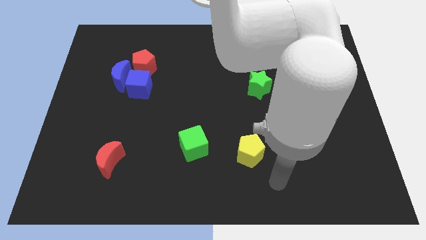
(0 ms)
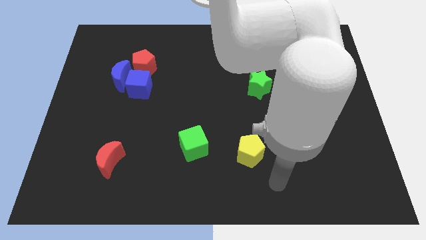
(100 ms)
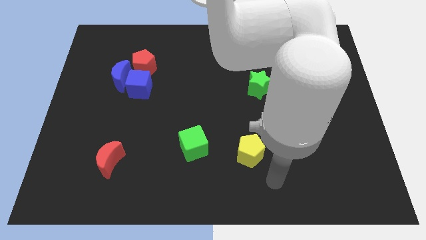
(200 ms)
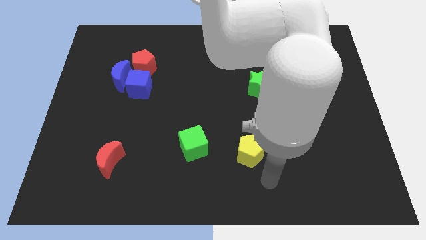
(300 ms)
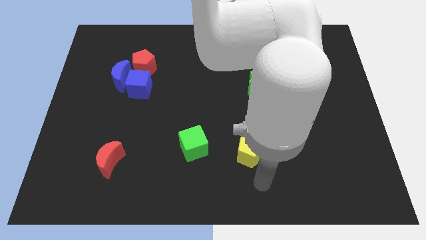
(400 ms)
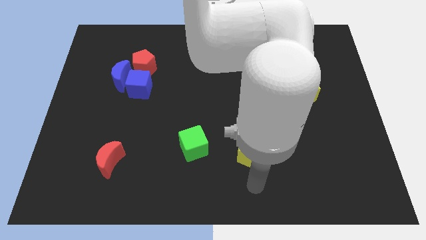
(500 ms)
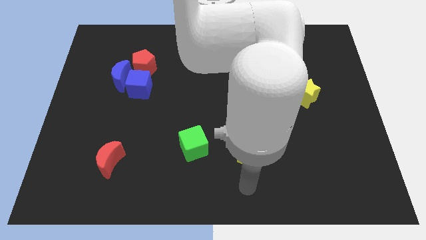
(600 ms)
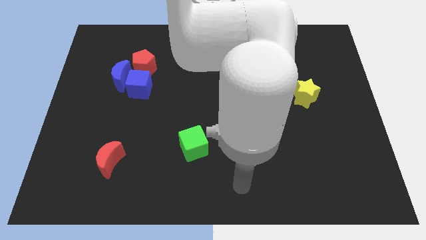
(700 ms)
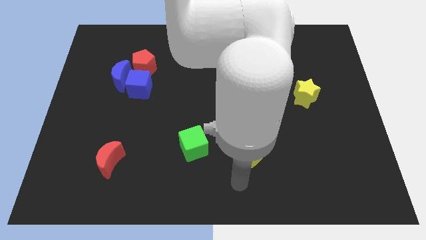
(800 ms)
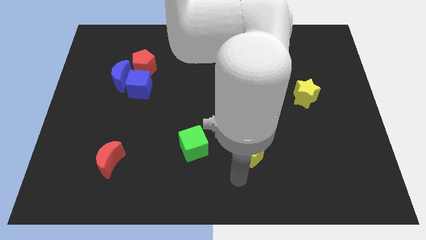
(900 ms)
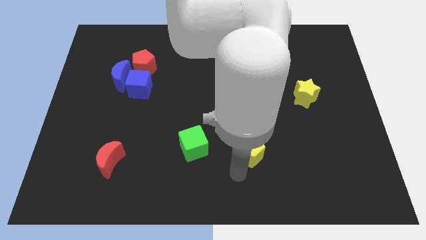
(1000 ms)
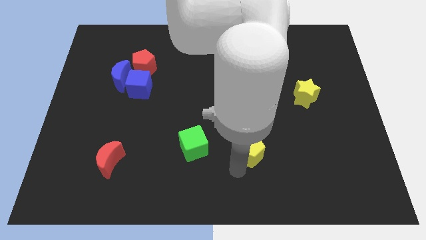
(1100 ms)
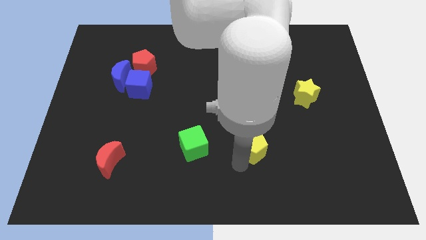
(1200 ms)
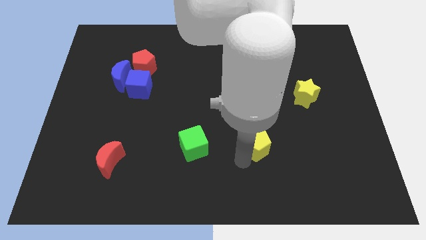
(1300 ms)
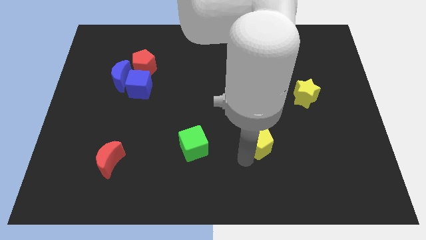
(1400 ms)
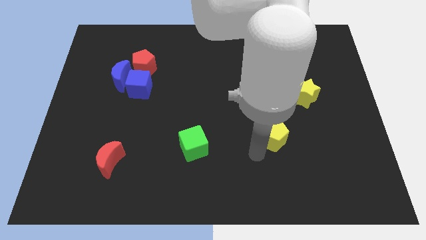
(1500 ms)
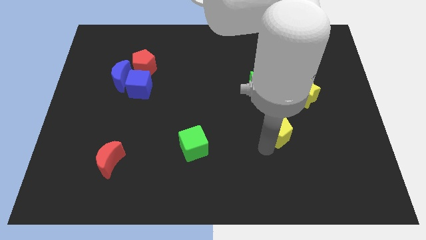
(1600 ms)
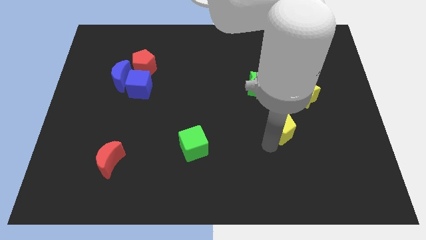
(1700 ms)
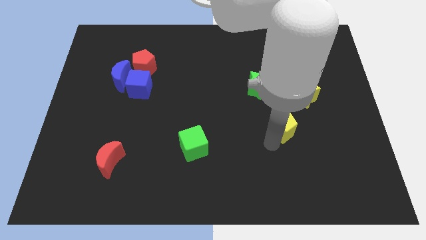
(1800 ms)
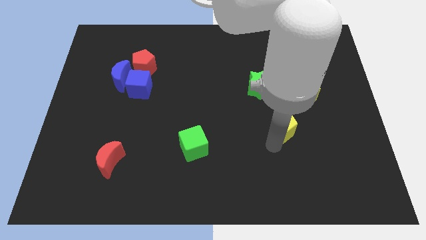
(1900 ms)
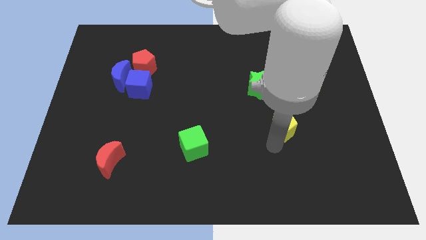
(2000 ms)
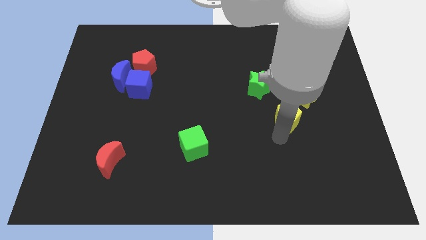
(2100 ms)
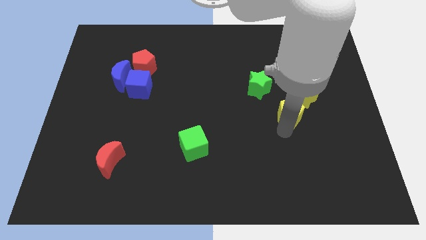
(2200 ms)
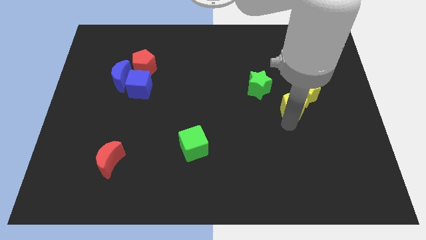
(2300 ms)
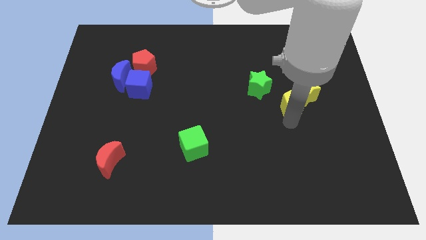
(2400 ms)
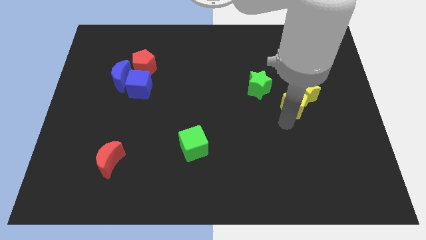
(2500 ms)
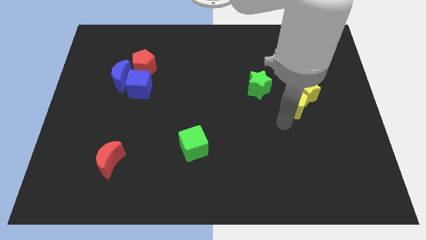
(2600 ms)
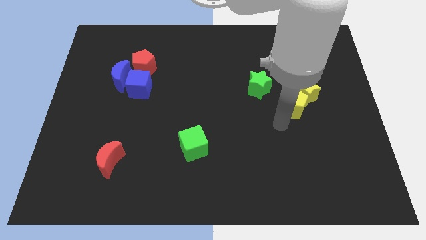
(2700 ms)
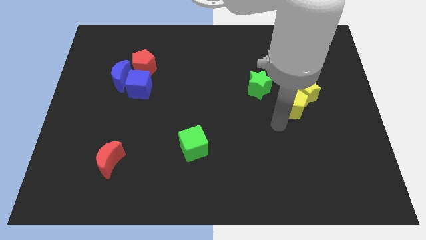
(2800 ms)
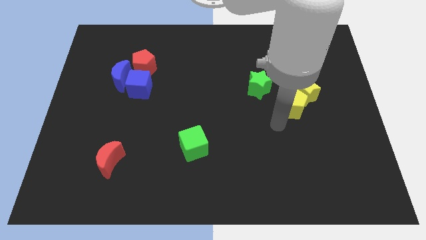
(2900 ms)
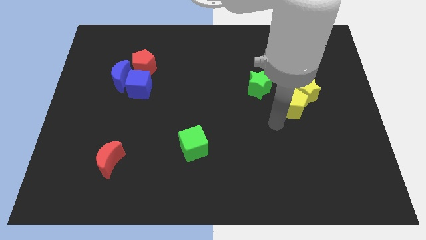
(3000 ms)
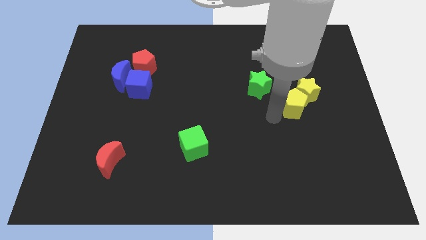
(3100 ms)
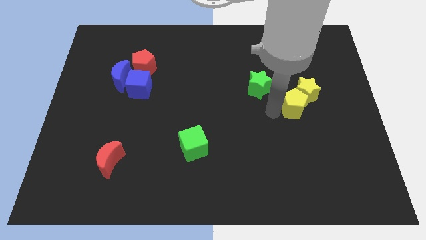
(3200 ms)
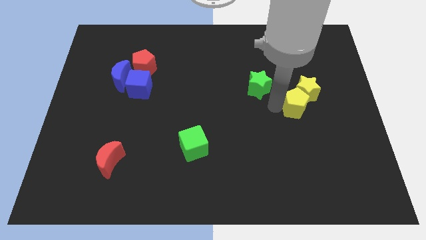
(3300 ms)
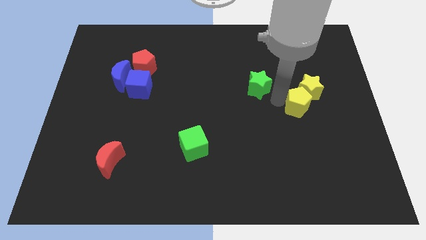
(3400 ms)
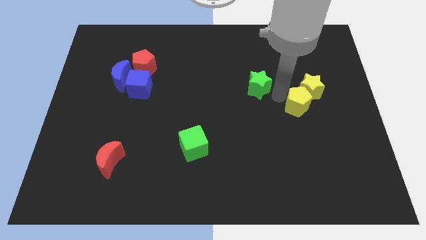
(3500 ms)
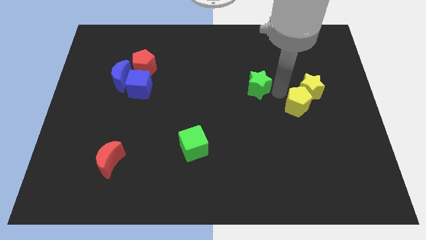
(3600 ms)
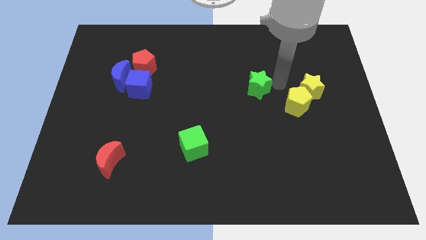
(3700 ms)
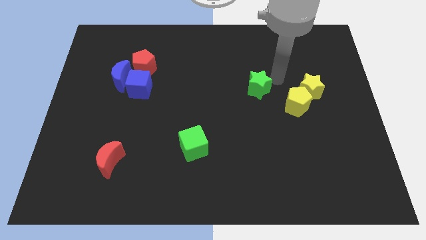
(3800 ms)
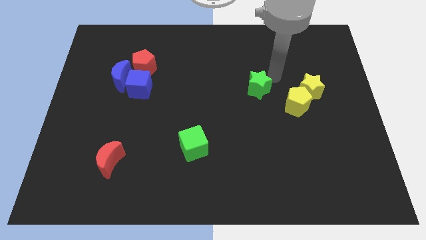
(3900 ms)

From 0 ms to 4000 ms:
push the yellow pentagon into the yellow star

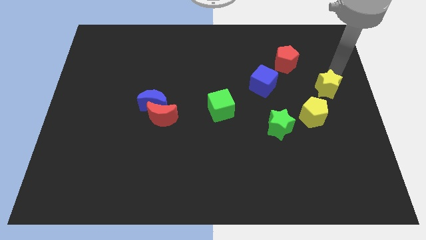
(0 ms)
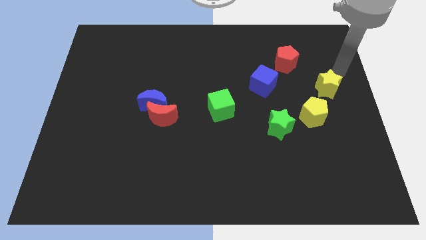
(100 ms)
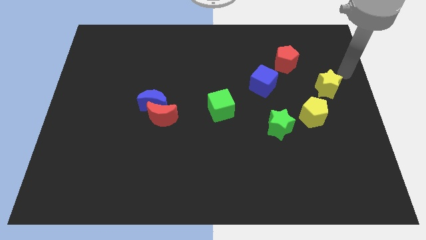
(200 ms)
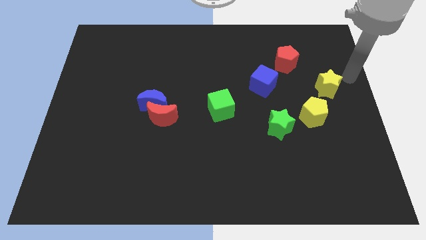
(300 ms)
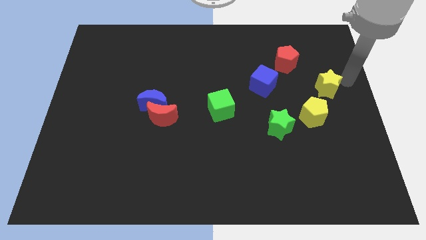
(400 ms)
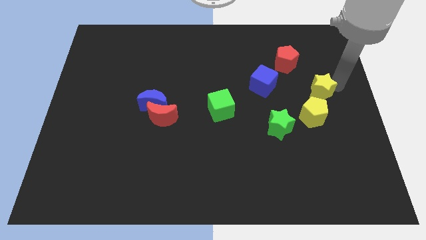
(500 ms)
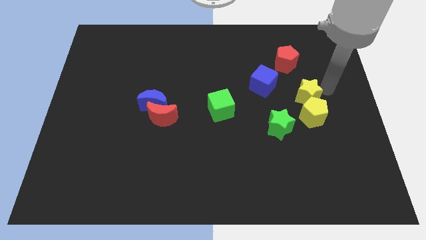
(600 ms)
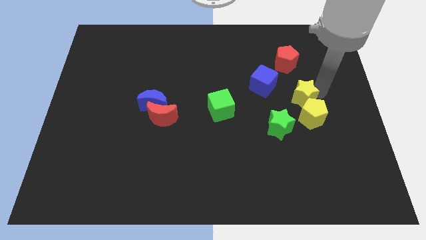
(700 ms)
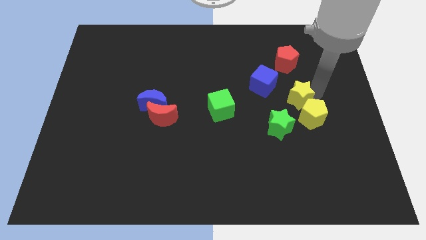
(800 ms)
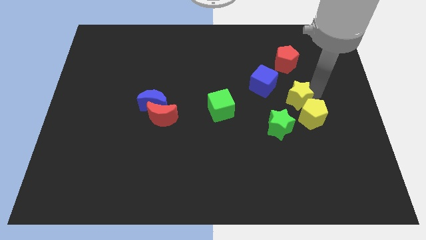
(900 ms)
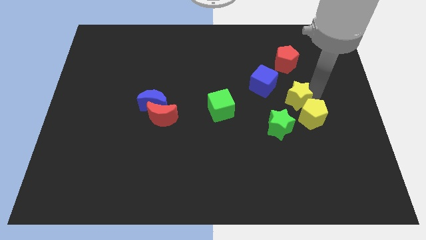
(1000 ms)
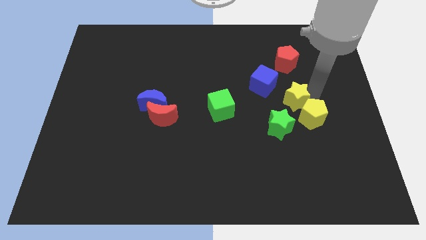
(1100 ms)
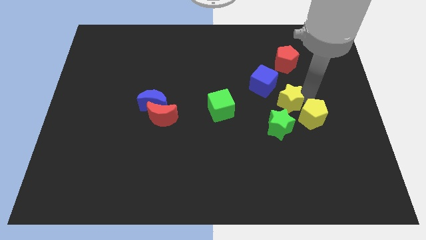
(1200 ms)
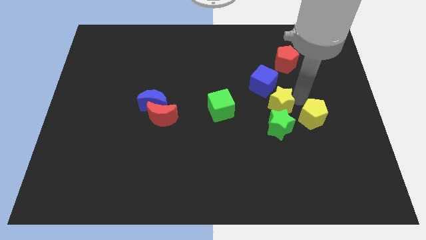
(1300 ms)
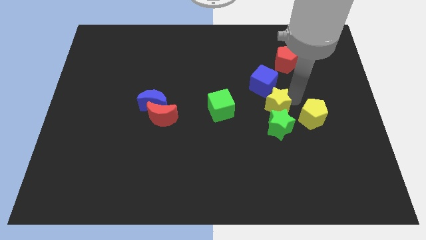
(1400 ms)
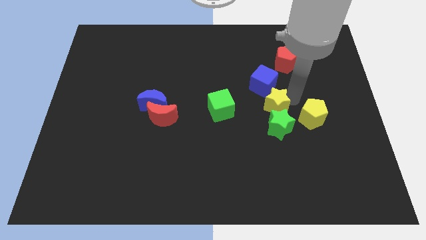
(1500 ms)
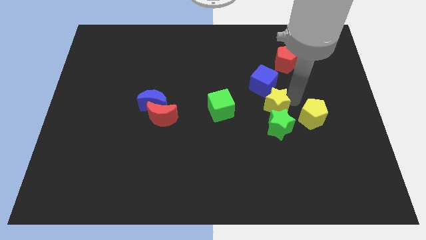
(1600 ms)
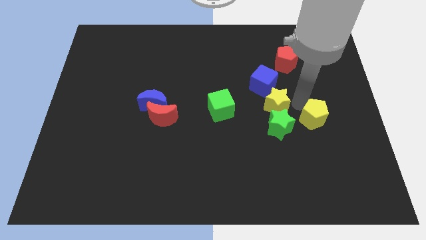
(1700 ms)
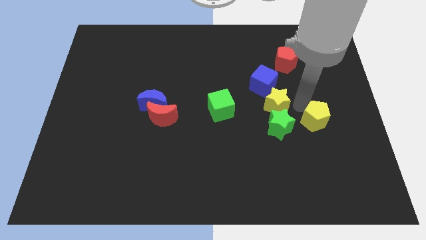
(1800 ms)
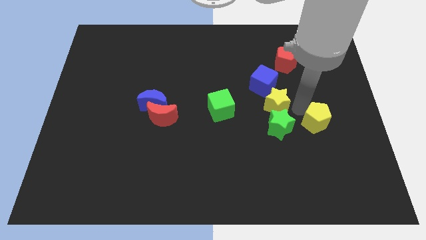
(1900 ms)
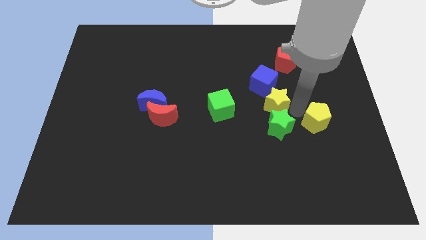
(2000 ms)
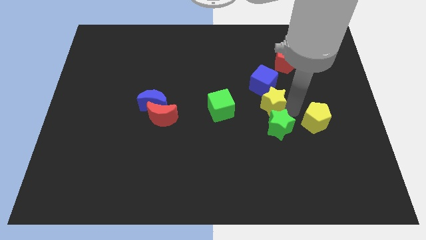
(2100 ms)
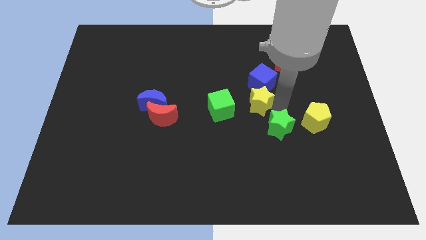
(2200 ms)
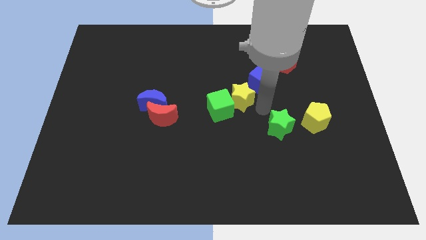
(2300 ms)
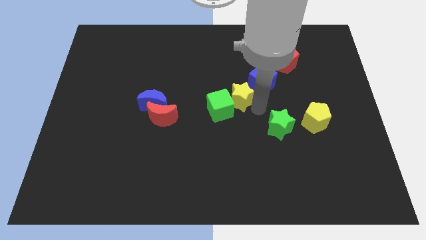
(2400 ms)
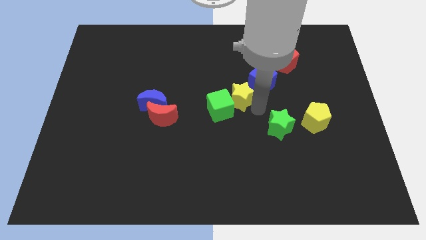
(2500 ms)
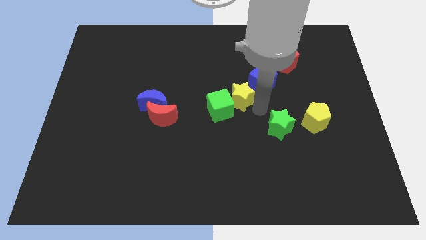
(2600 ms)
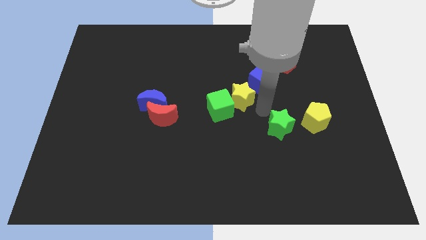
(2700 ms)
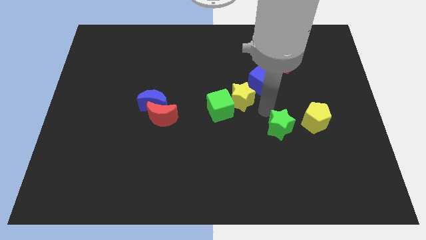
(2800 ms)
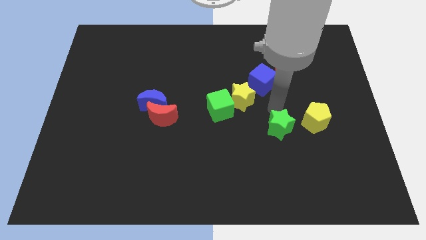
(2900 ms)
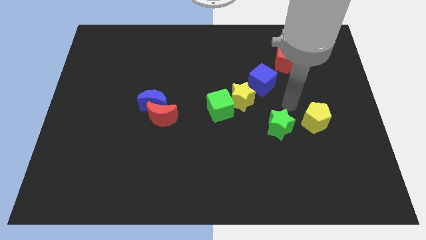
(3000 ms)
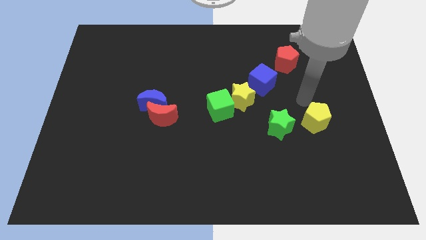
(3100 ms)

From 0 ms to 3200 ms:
move the yellow star in betwen green cube and blue cube

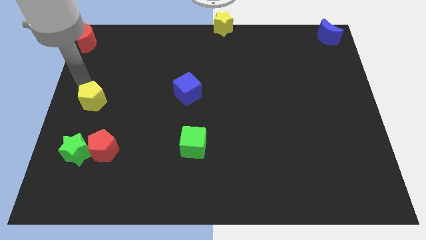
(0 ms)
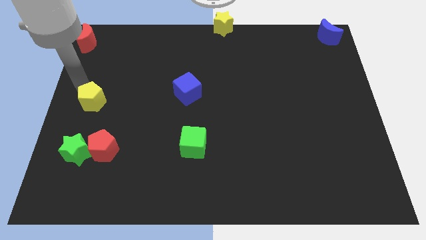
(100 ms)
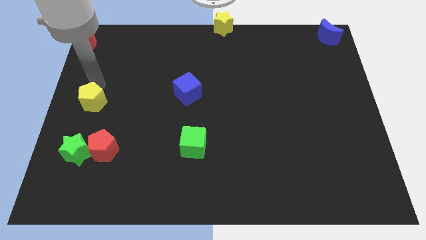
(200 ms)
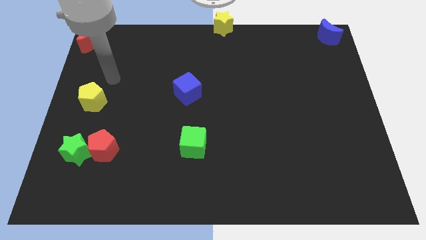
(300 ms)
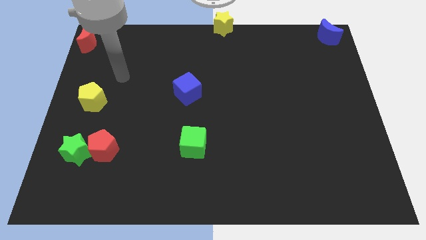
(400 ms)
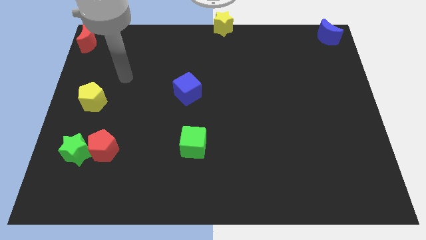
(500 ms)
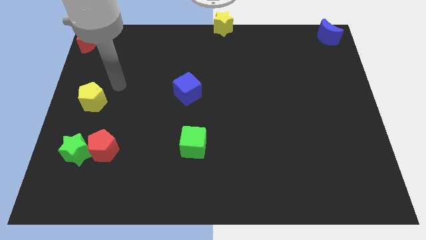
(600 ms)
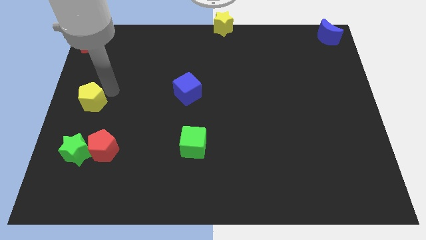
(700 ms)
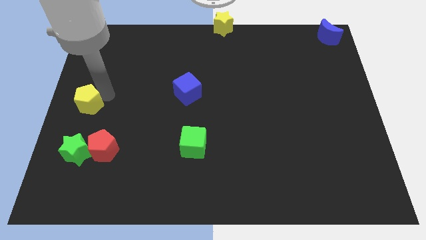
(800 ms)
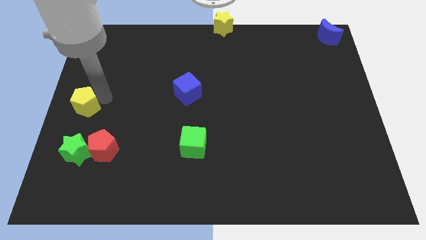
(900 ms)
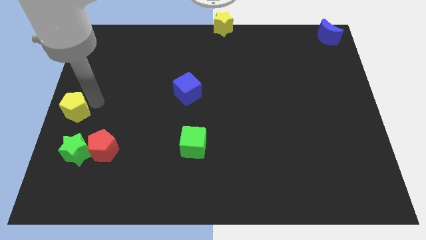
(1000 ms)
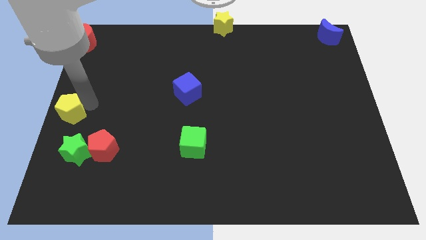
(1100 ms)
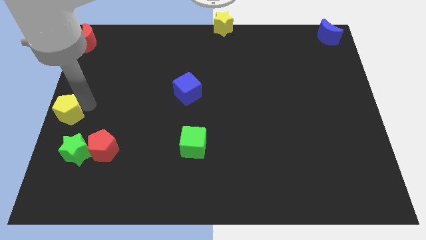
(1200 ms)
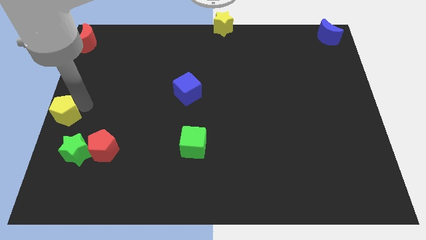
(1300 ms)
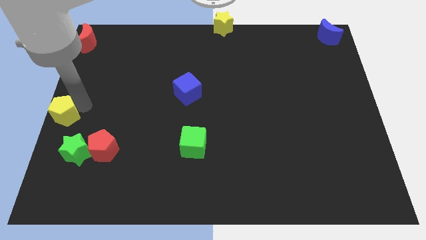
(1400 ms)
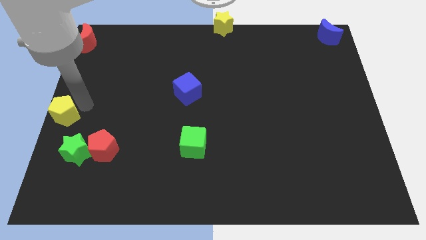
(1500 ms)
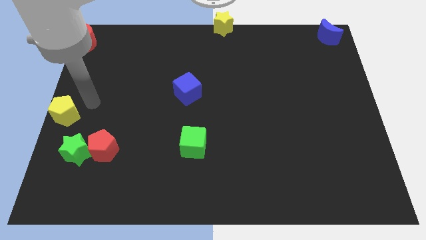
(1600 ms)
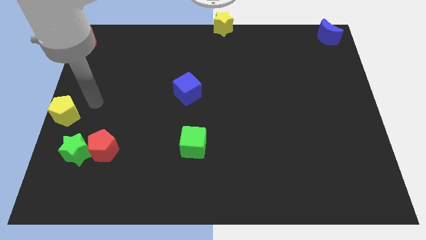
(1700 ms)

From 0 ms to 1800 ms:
place yellow pentagon on the left side of the board
